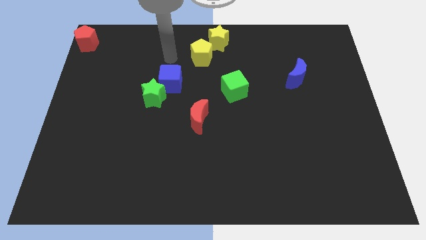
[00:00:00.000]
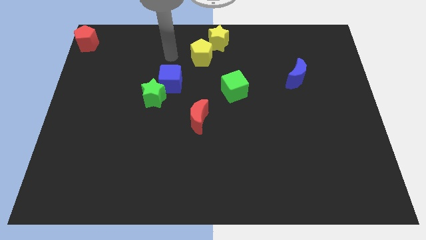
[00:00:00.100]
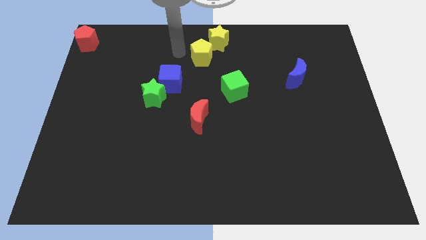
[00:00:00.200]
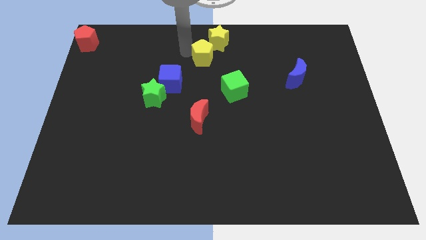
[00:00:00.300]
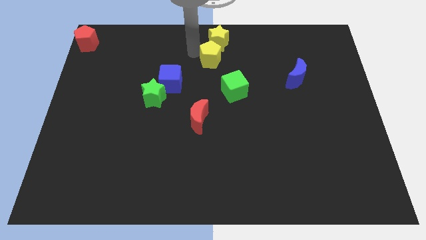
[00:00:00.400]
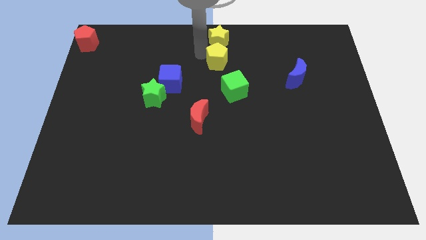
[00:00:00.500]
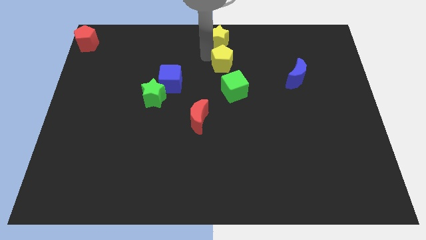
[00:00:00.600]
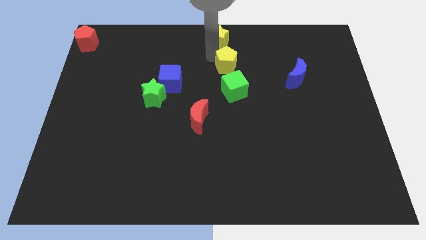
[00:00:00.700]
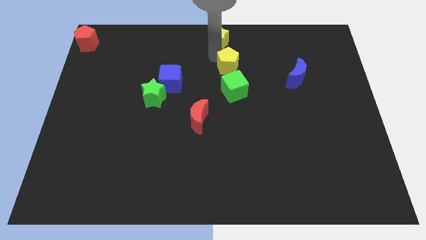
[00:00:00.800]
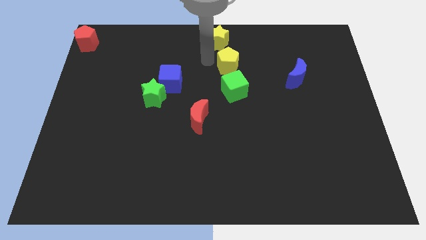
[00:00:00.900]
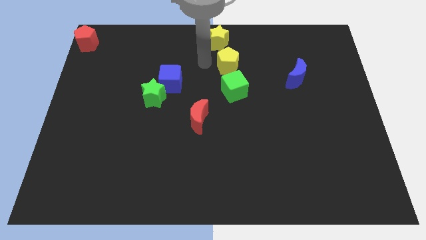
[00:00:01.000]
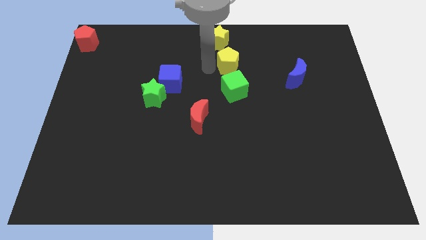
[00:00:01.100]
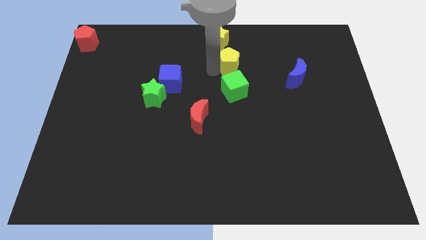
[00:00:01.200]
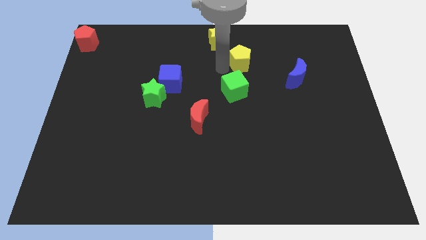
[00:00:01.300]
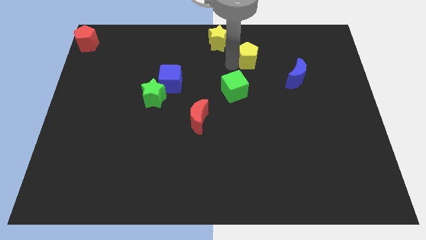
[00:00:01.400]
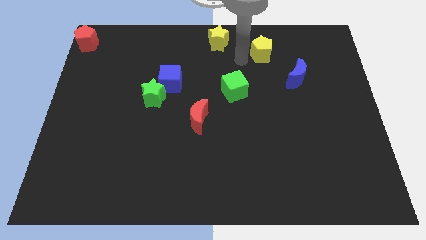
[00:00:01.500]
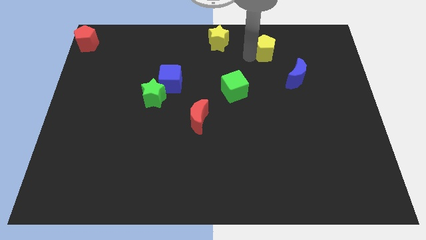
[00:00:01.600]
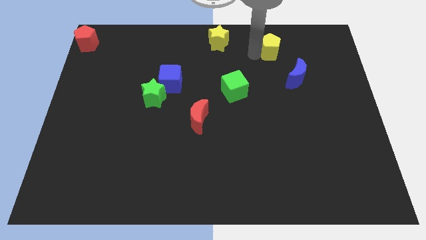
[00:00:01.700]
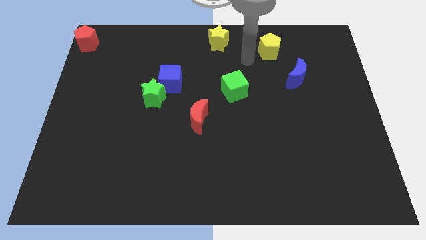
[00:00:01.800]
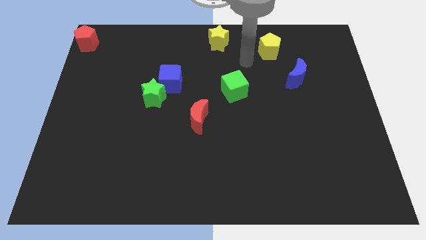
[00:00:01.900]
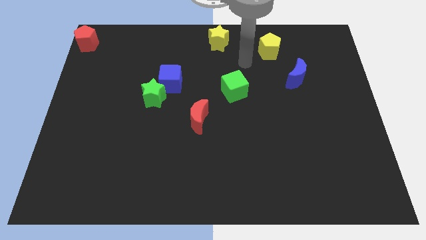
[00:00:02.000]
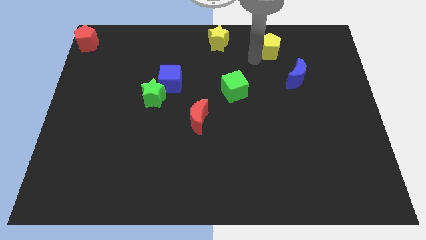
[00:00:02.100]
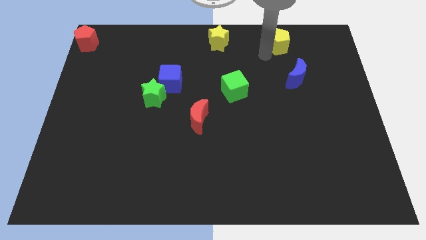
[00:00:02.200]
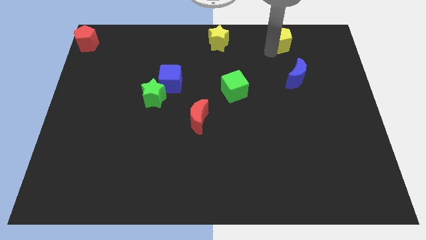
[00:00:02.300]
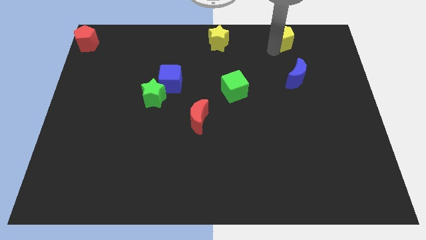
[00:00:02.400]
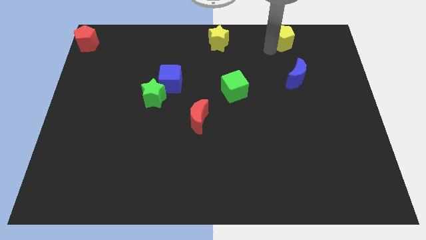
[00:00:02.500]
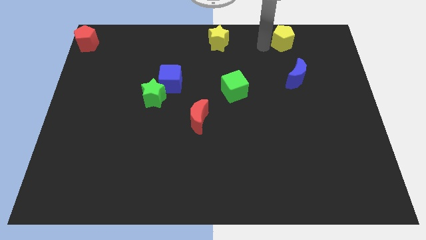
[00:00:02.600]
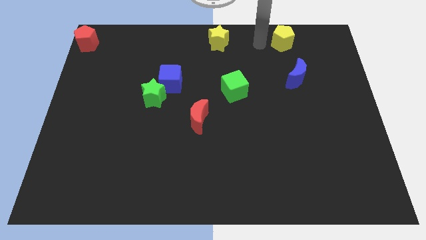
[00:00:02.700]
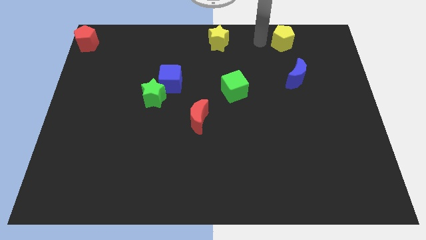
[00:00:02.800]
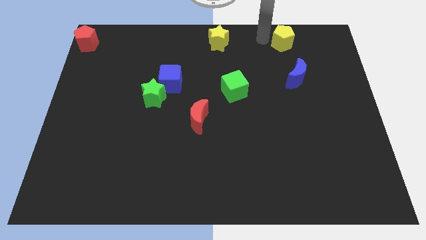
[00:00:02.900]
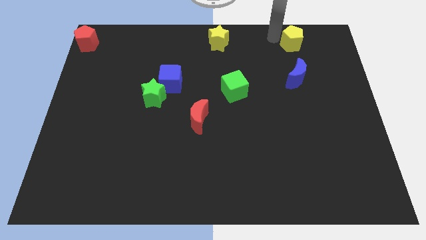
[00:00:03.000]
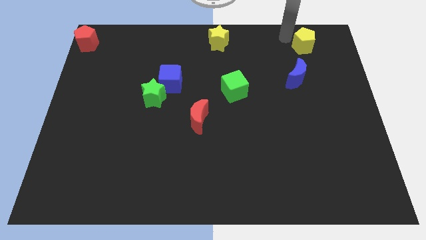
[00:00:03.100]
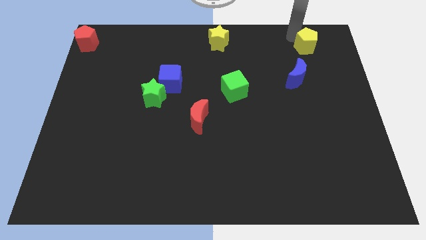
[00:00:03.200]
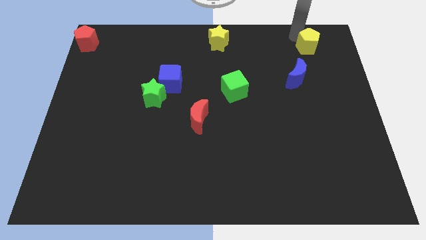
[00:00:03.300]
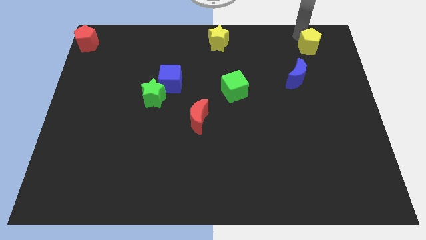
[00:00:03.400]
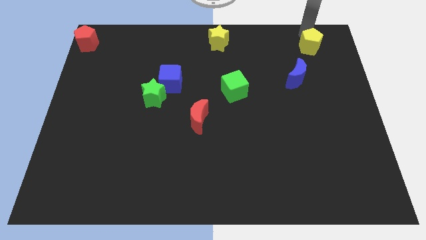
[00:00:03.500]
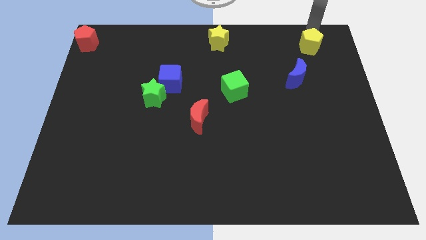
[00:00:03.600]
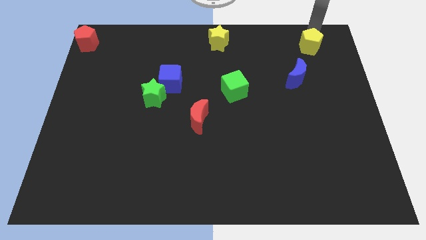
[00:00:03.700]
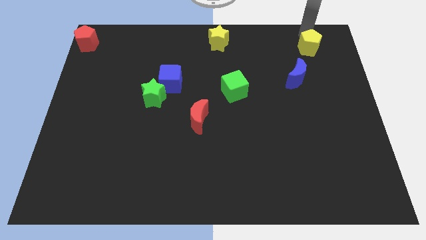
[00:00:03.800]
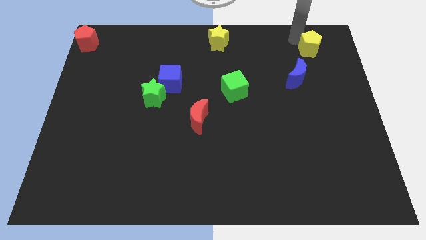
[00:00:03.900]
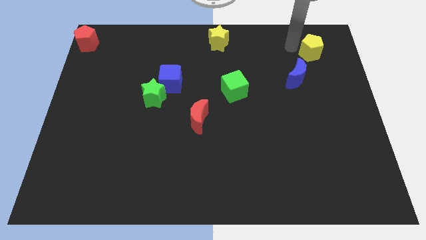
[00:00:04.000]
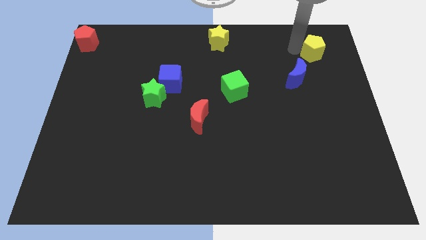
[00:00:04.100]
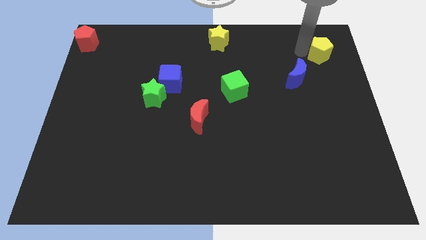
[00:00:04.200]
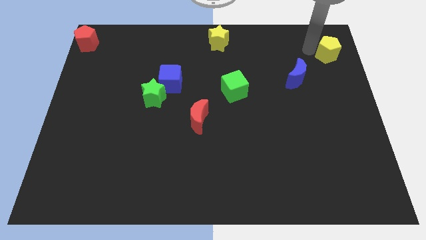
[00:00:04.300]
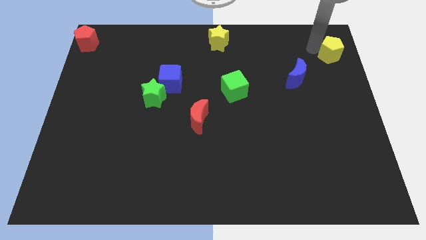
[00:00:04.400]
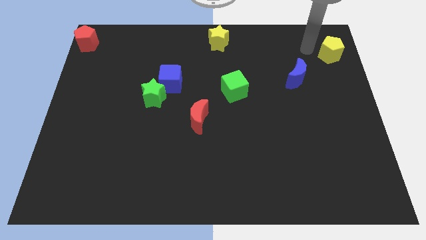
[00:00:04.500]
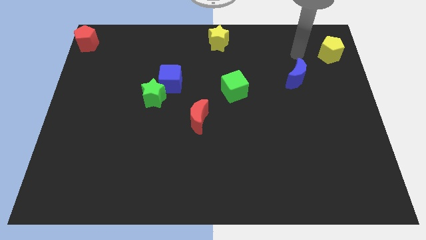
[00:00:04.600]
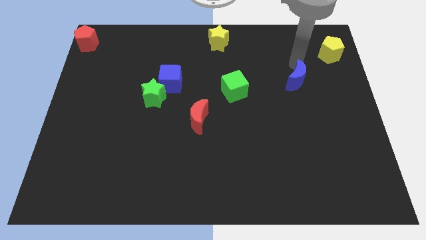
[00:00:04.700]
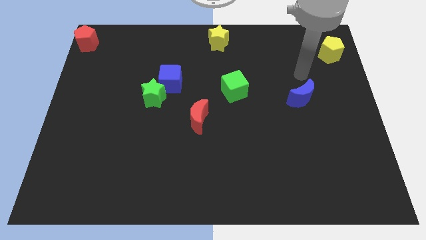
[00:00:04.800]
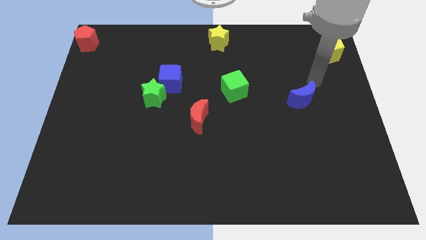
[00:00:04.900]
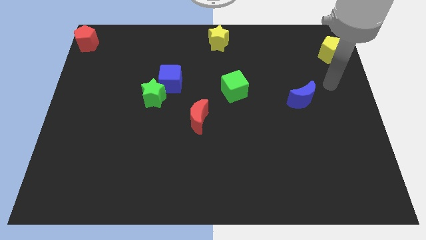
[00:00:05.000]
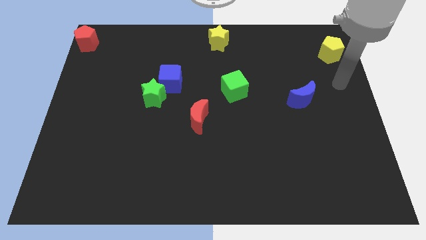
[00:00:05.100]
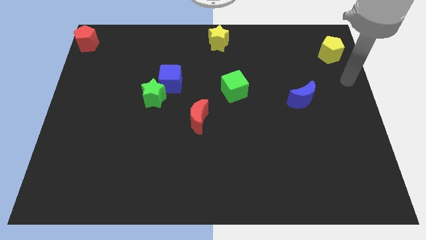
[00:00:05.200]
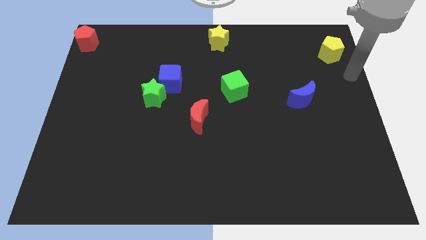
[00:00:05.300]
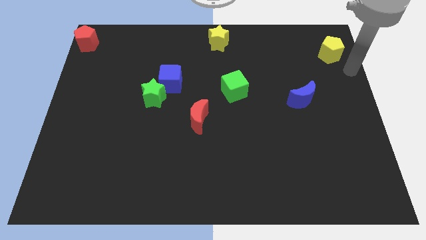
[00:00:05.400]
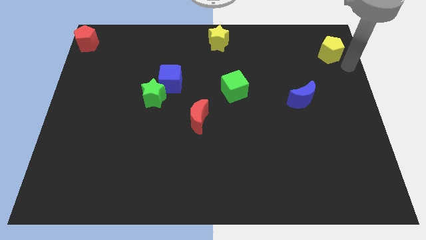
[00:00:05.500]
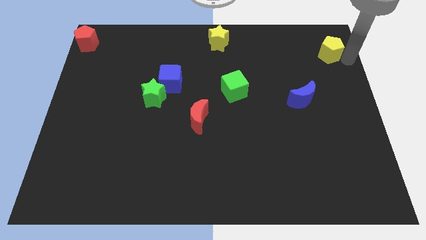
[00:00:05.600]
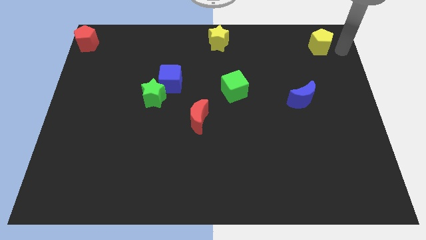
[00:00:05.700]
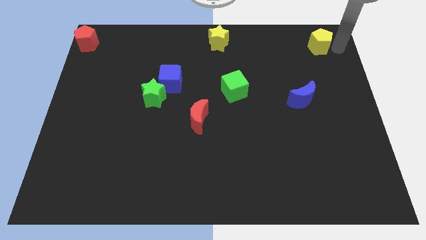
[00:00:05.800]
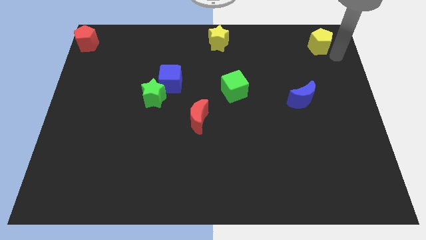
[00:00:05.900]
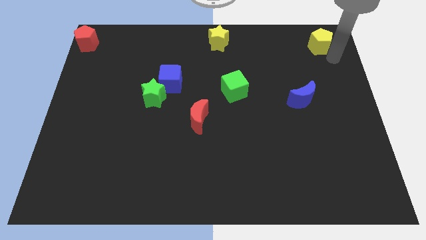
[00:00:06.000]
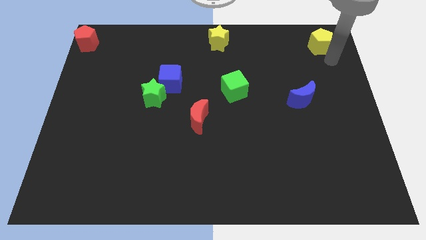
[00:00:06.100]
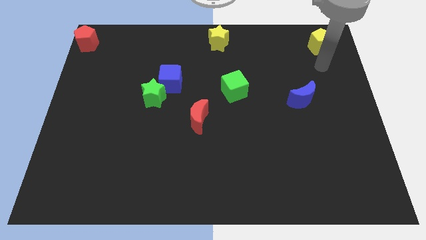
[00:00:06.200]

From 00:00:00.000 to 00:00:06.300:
push the yellow pentagon to the top right corner of the board

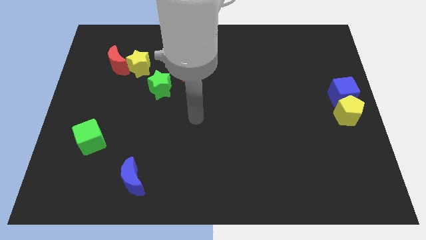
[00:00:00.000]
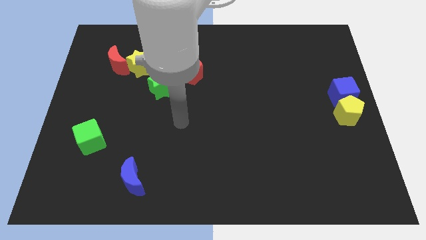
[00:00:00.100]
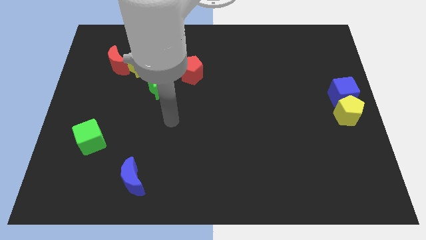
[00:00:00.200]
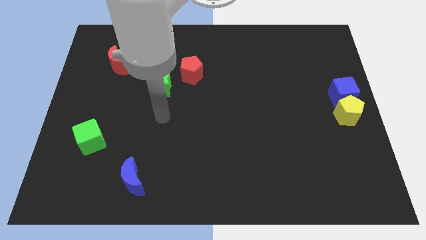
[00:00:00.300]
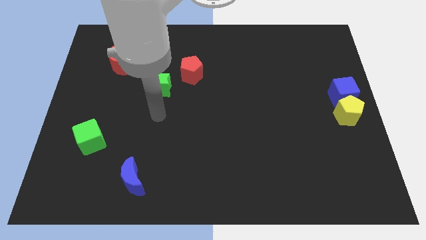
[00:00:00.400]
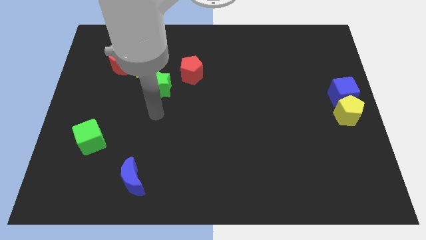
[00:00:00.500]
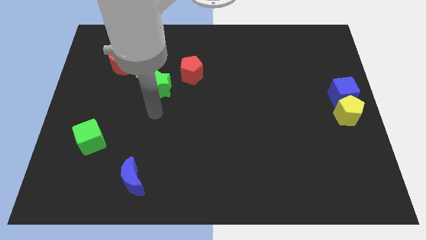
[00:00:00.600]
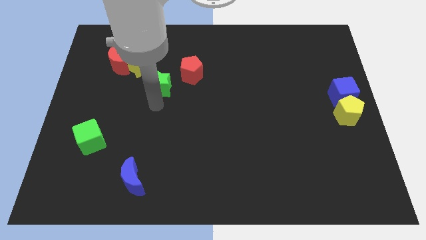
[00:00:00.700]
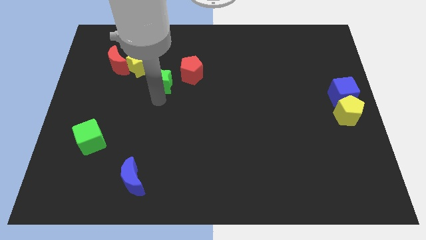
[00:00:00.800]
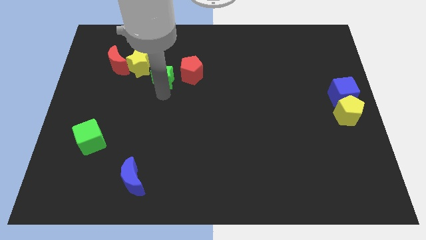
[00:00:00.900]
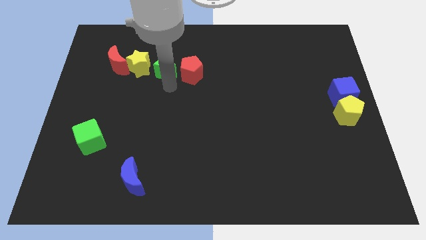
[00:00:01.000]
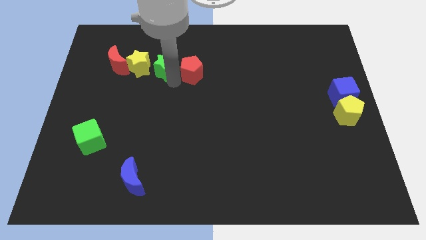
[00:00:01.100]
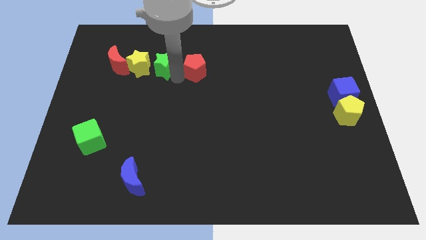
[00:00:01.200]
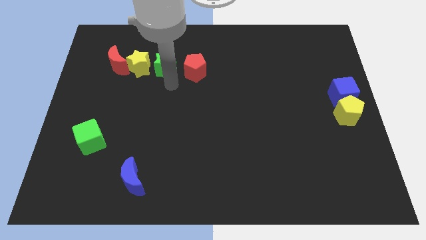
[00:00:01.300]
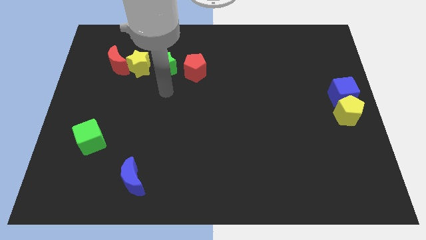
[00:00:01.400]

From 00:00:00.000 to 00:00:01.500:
place the arm in between the yellow star and the red pentagon

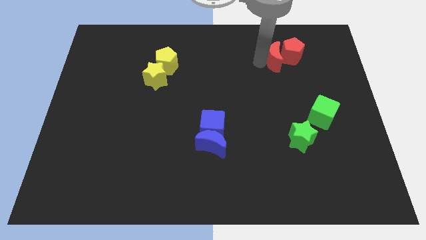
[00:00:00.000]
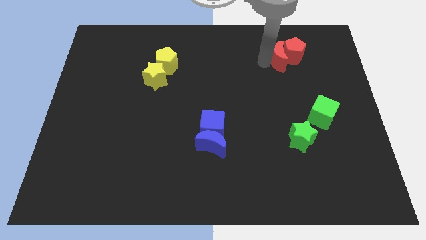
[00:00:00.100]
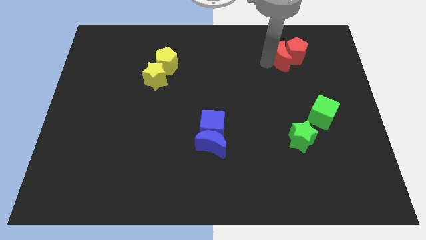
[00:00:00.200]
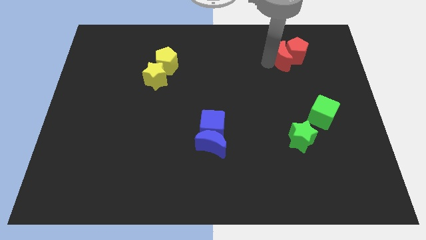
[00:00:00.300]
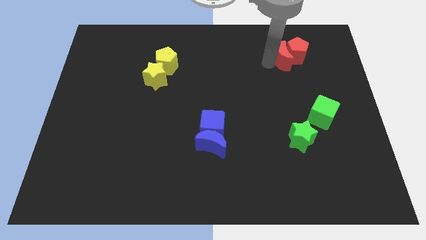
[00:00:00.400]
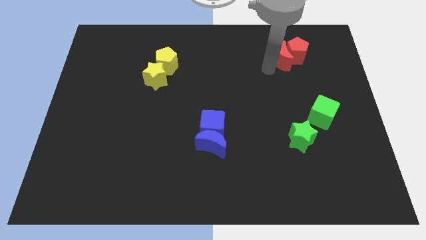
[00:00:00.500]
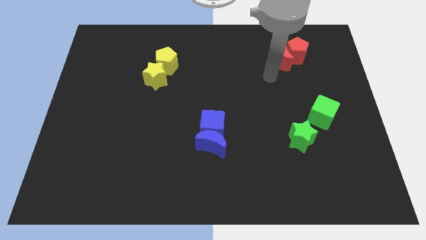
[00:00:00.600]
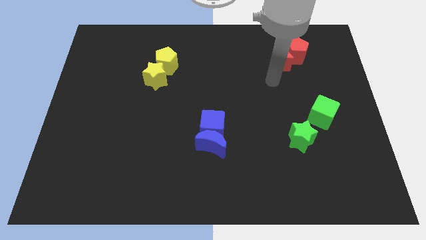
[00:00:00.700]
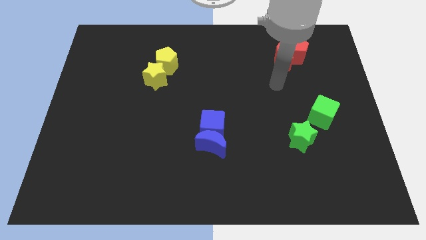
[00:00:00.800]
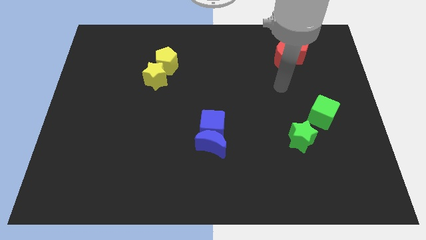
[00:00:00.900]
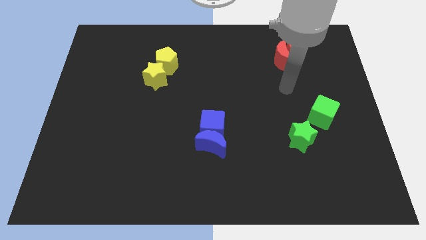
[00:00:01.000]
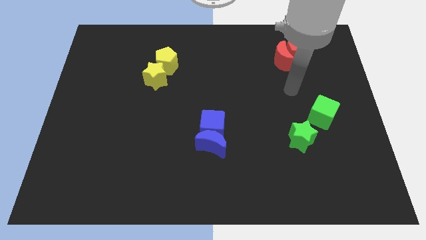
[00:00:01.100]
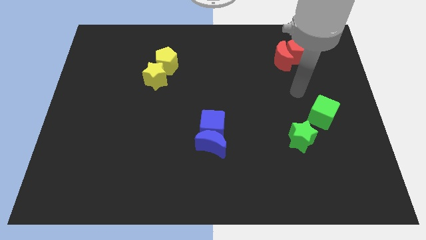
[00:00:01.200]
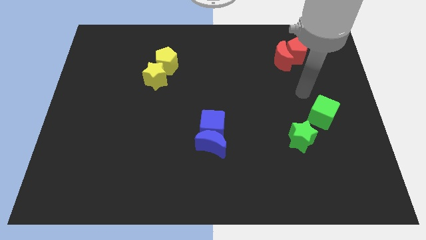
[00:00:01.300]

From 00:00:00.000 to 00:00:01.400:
move the arm above the green star
